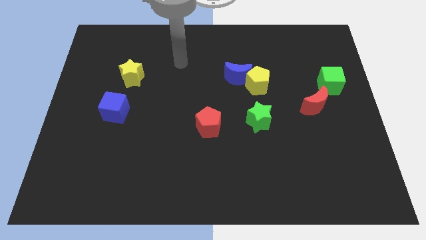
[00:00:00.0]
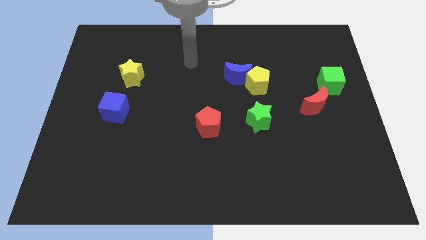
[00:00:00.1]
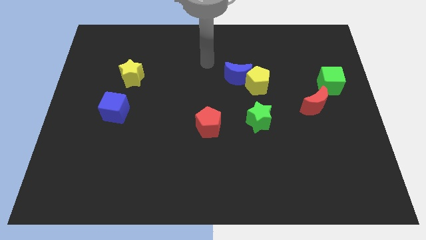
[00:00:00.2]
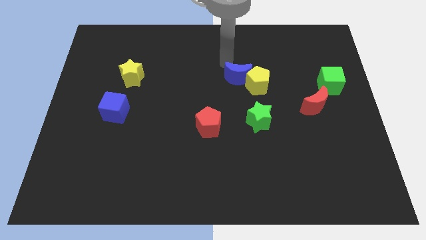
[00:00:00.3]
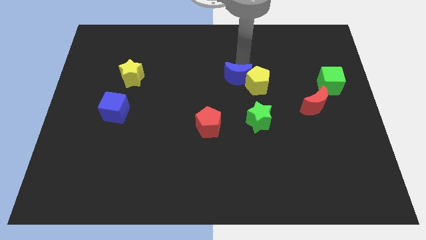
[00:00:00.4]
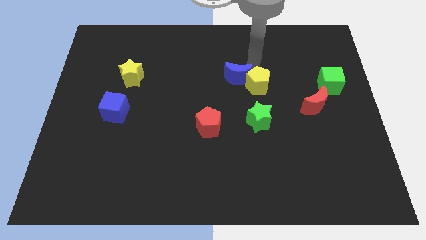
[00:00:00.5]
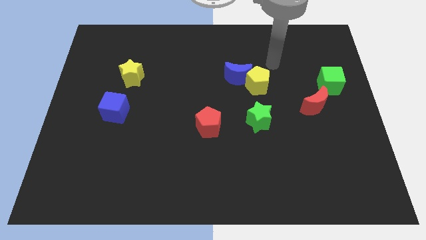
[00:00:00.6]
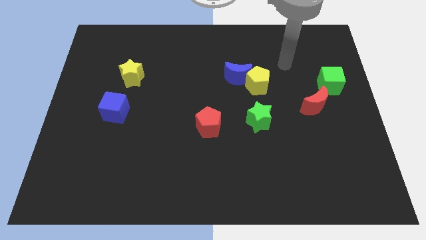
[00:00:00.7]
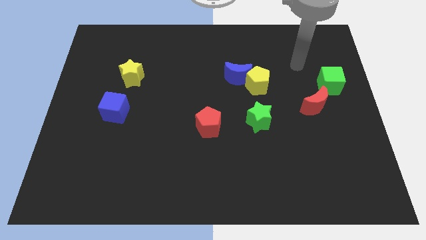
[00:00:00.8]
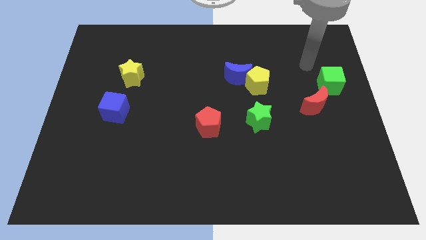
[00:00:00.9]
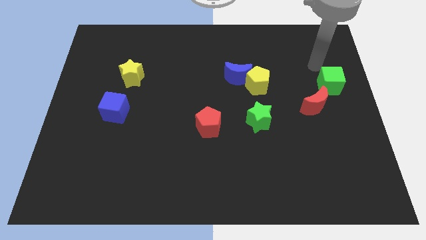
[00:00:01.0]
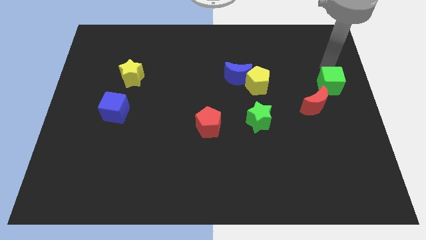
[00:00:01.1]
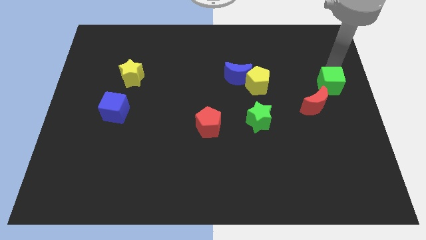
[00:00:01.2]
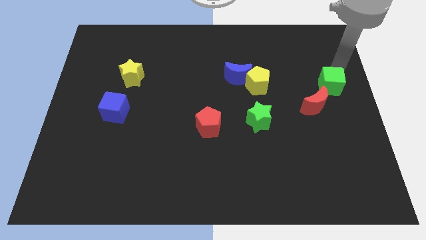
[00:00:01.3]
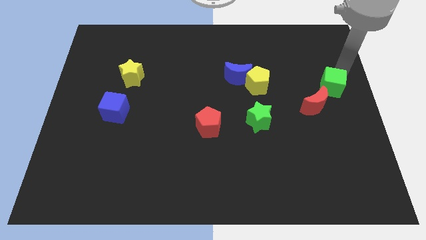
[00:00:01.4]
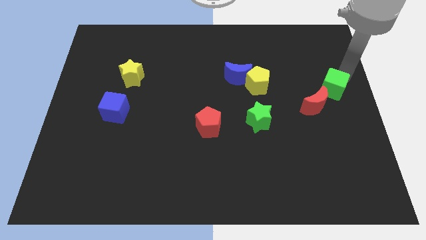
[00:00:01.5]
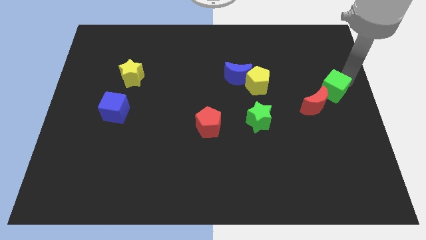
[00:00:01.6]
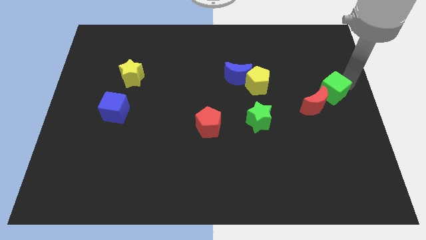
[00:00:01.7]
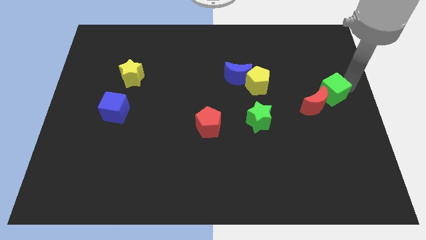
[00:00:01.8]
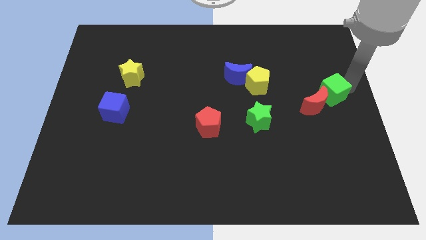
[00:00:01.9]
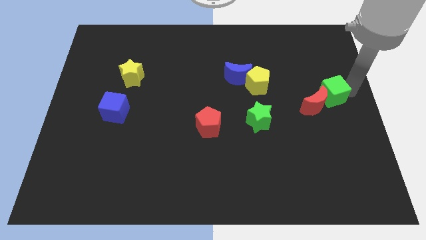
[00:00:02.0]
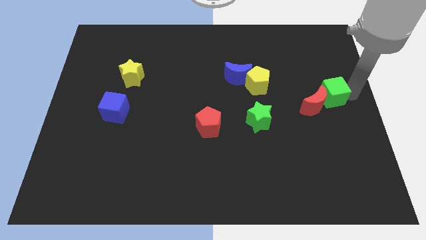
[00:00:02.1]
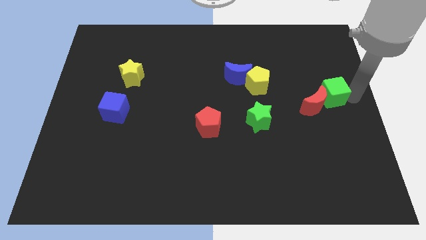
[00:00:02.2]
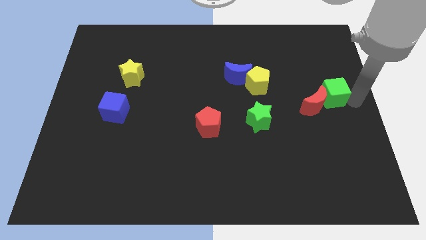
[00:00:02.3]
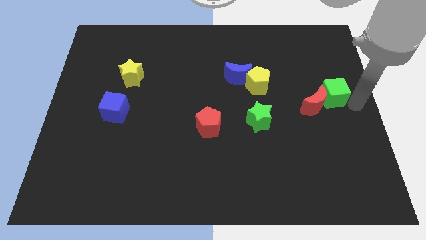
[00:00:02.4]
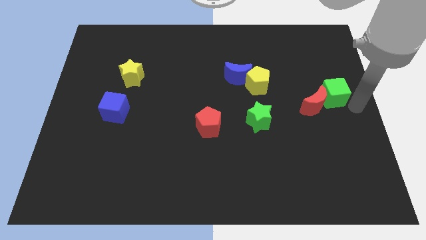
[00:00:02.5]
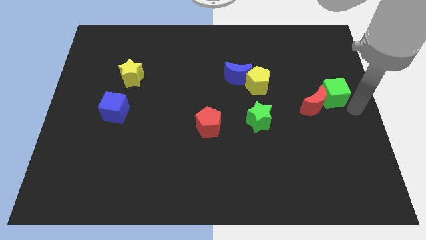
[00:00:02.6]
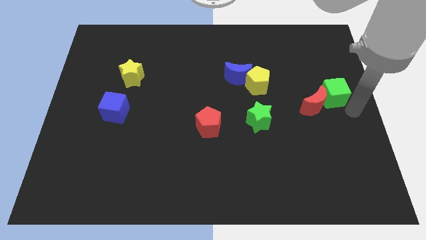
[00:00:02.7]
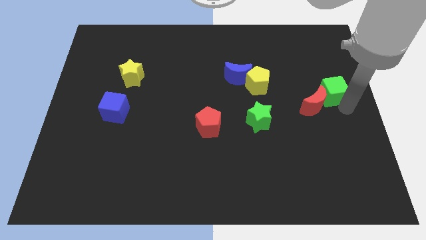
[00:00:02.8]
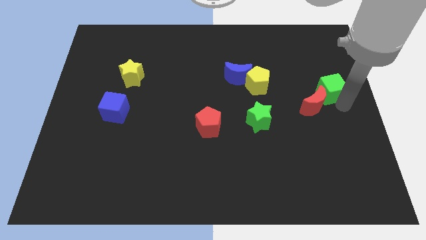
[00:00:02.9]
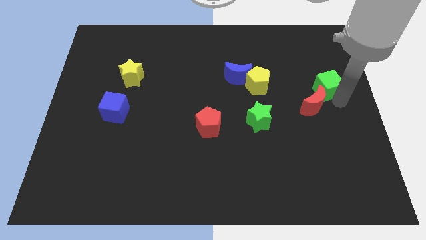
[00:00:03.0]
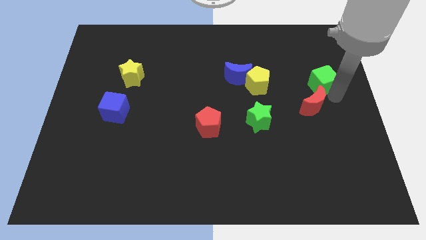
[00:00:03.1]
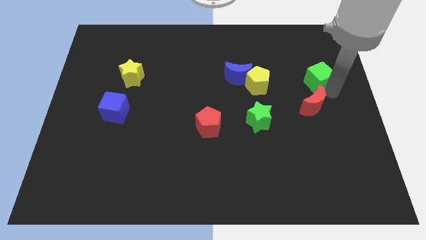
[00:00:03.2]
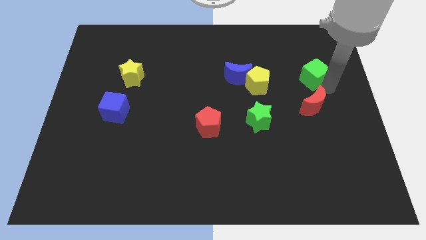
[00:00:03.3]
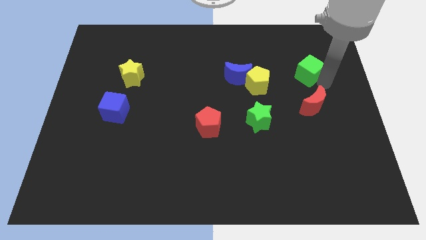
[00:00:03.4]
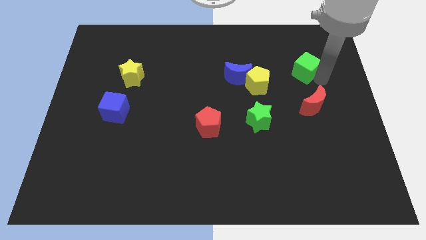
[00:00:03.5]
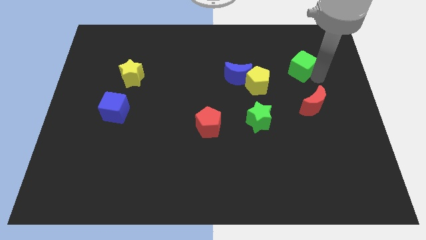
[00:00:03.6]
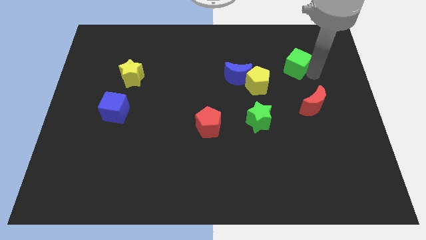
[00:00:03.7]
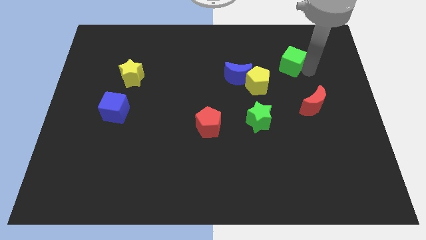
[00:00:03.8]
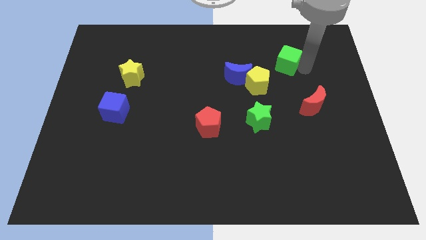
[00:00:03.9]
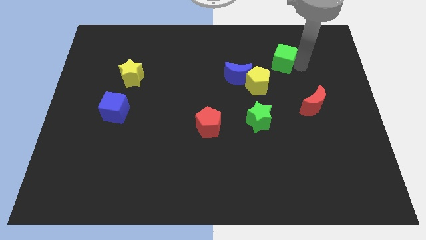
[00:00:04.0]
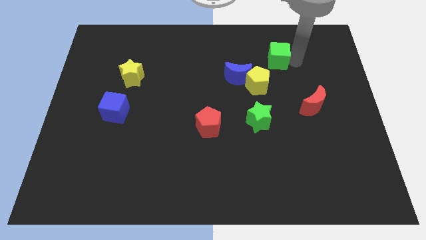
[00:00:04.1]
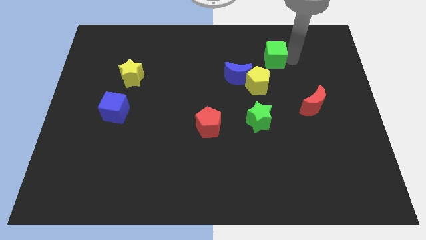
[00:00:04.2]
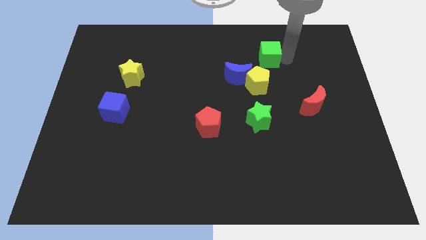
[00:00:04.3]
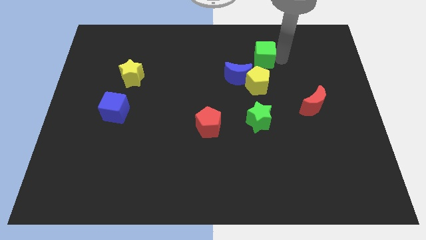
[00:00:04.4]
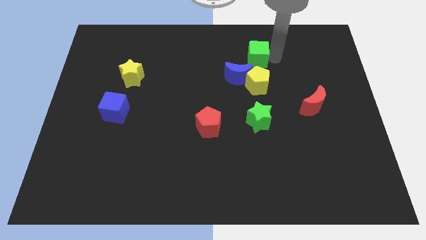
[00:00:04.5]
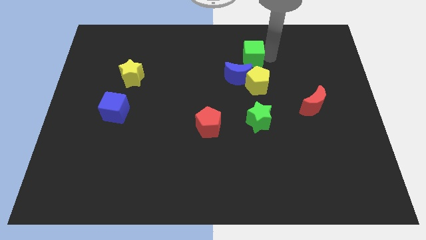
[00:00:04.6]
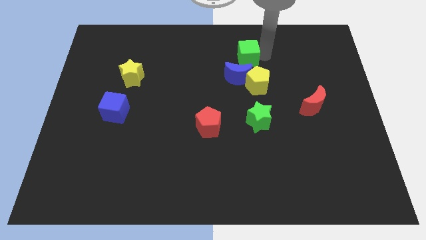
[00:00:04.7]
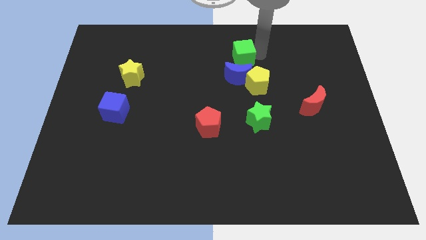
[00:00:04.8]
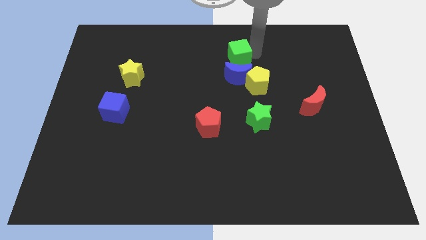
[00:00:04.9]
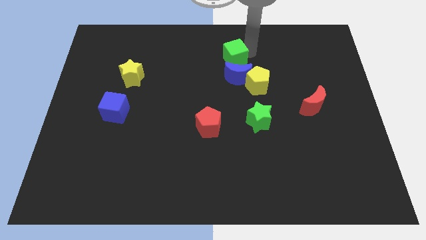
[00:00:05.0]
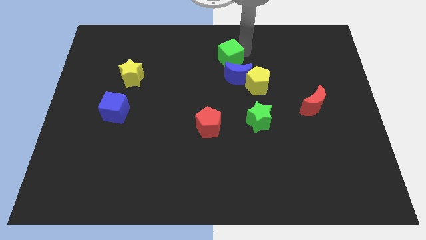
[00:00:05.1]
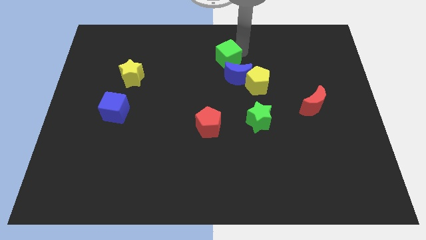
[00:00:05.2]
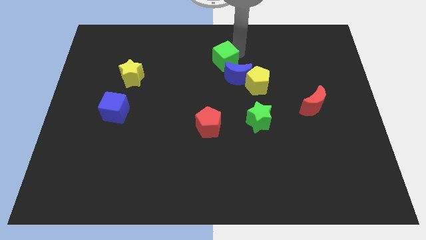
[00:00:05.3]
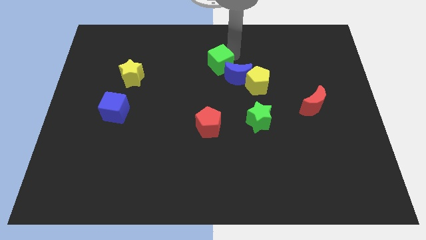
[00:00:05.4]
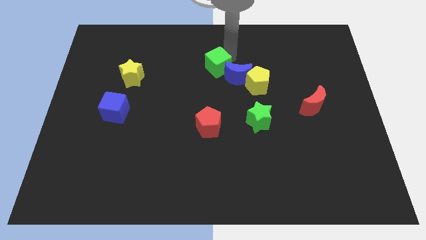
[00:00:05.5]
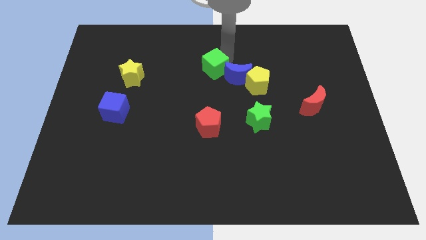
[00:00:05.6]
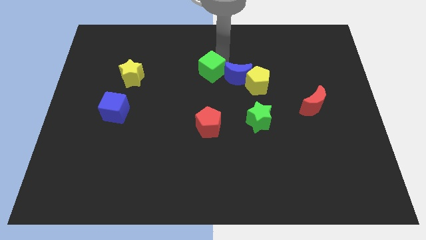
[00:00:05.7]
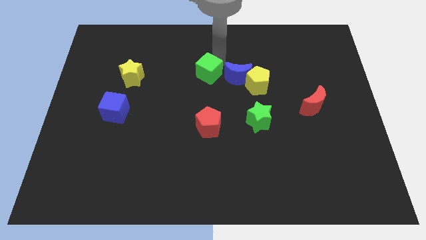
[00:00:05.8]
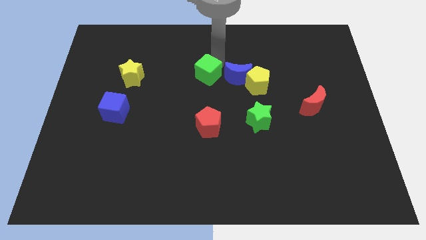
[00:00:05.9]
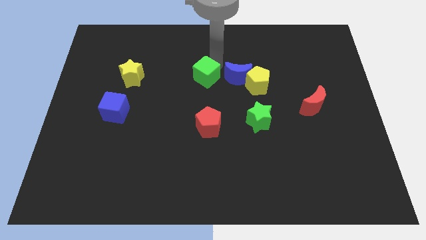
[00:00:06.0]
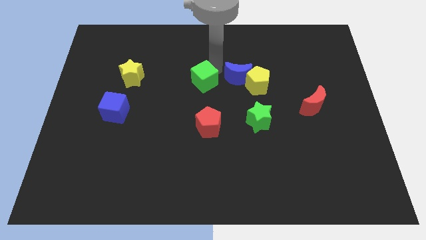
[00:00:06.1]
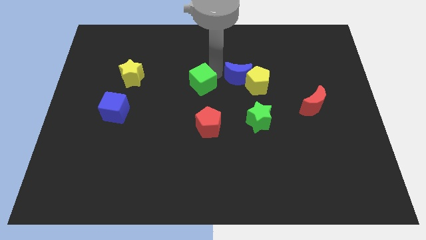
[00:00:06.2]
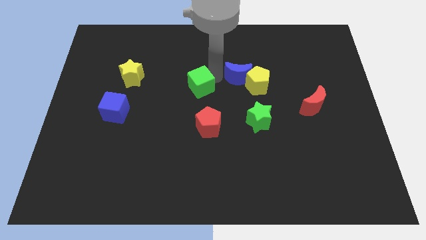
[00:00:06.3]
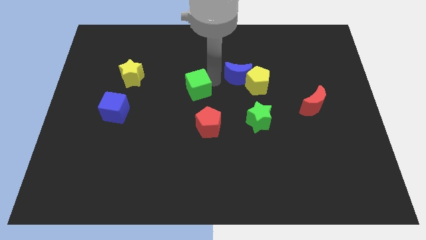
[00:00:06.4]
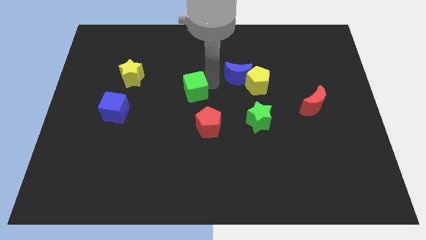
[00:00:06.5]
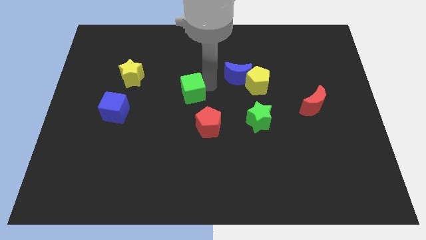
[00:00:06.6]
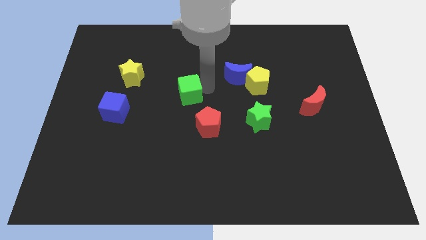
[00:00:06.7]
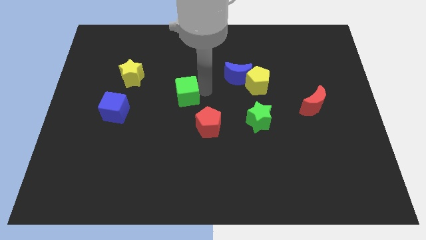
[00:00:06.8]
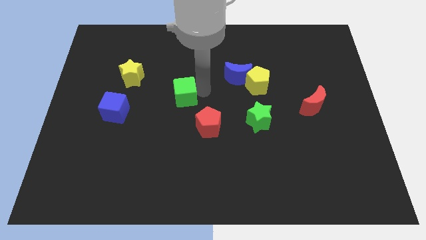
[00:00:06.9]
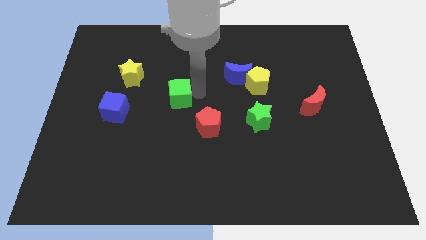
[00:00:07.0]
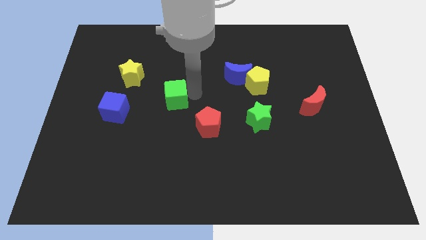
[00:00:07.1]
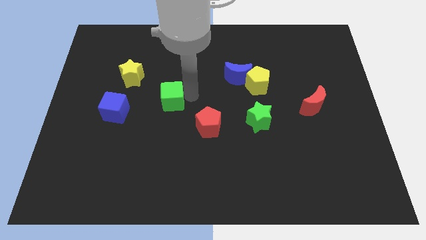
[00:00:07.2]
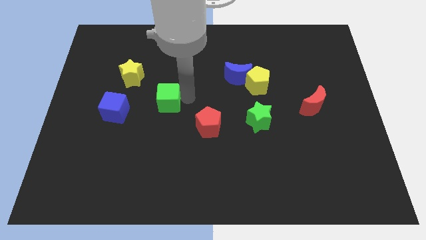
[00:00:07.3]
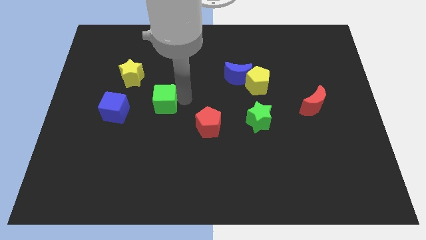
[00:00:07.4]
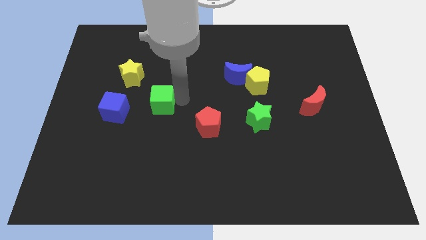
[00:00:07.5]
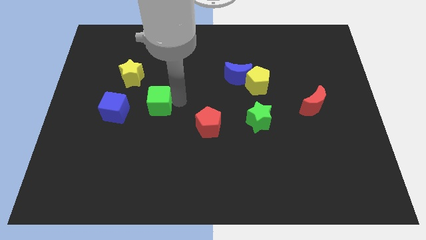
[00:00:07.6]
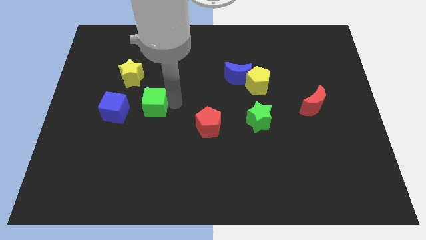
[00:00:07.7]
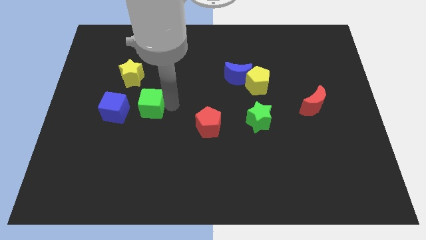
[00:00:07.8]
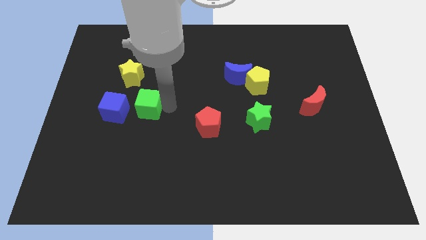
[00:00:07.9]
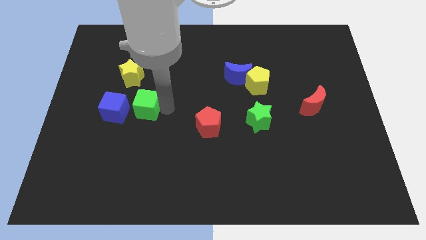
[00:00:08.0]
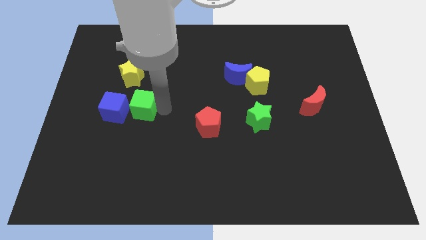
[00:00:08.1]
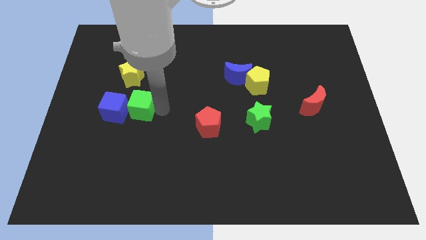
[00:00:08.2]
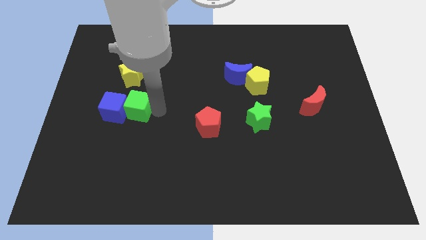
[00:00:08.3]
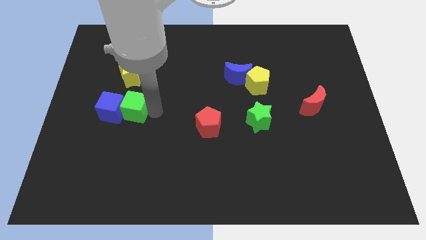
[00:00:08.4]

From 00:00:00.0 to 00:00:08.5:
push the green cube close to the blue cube
